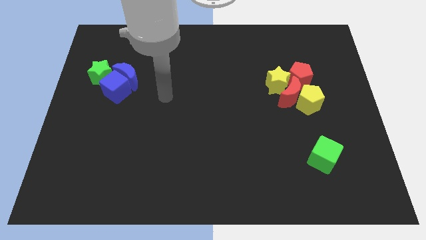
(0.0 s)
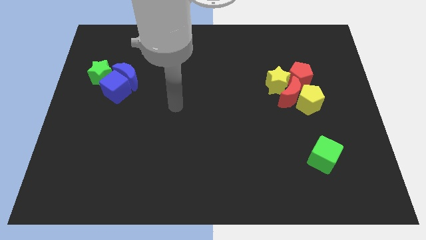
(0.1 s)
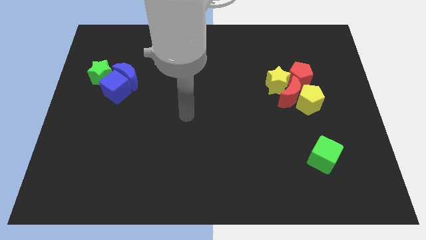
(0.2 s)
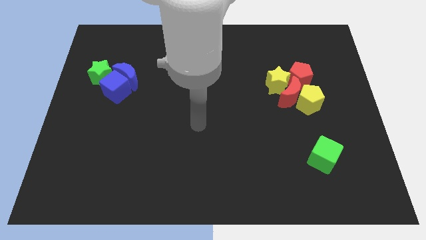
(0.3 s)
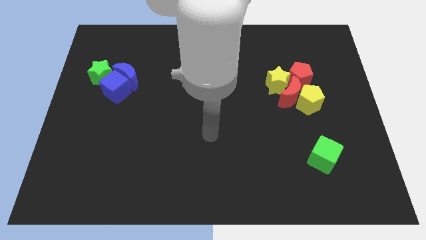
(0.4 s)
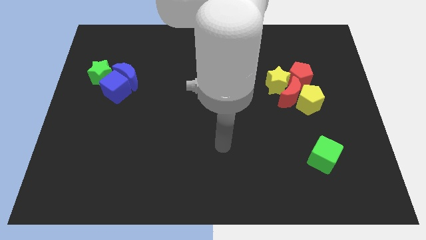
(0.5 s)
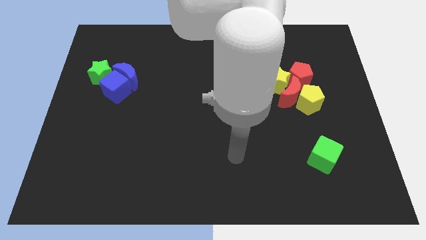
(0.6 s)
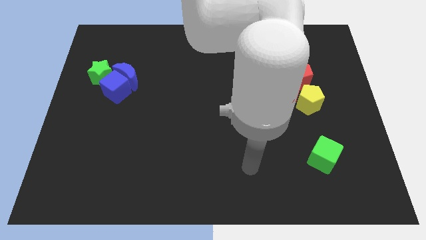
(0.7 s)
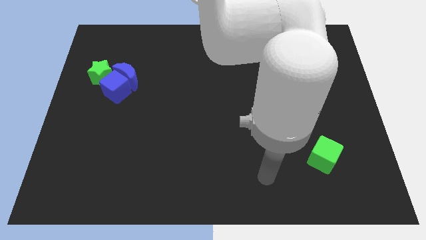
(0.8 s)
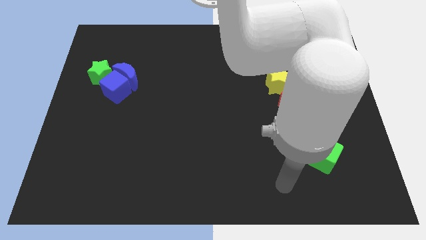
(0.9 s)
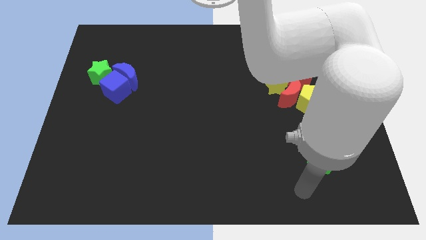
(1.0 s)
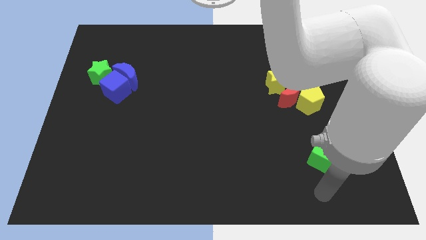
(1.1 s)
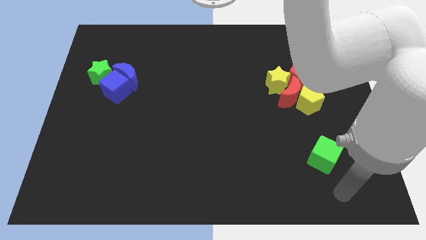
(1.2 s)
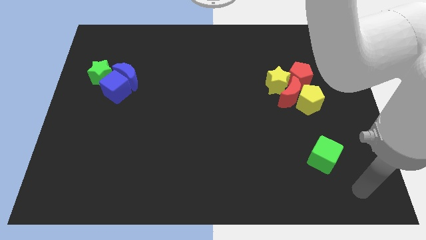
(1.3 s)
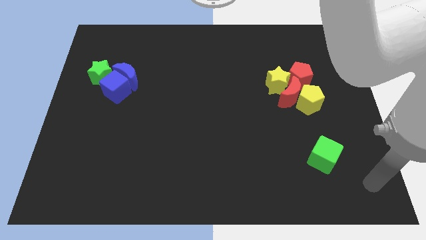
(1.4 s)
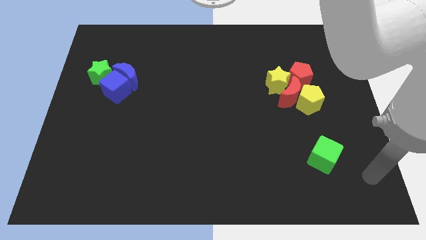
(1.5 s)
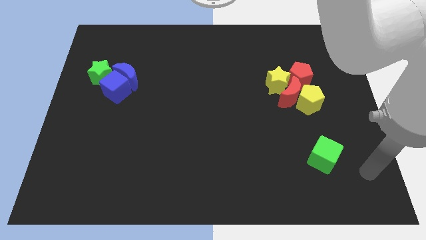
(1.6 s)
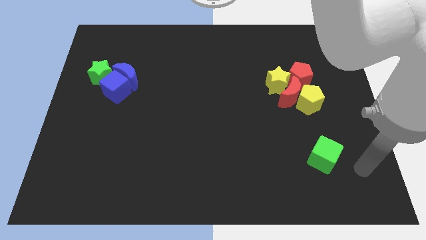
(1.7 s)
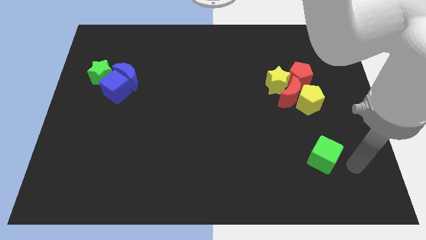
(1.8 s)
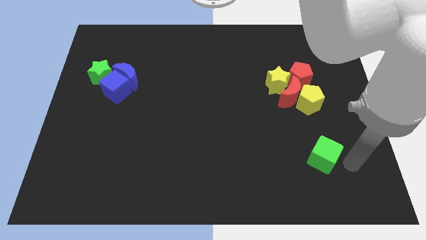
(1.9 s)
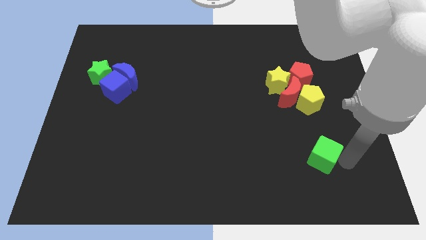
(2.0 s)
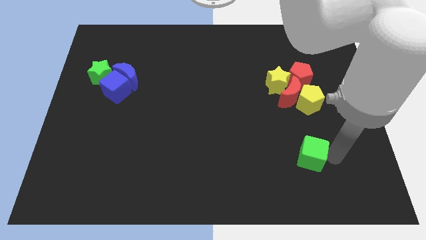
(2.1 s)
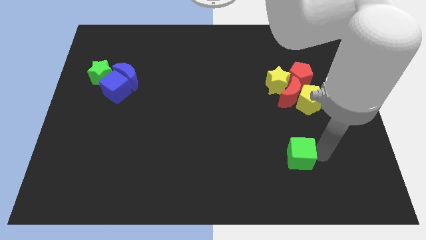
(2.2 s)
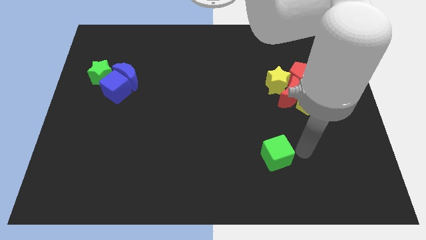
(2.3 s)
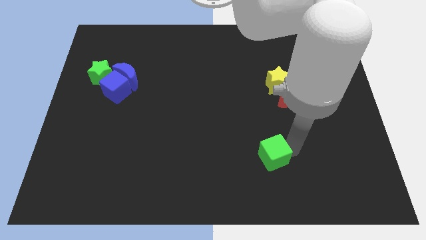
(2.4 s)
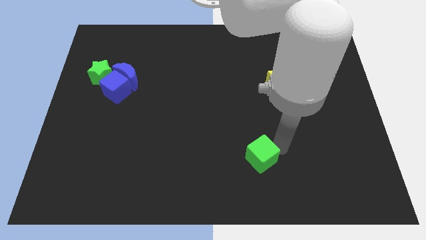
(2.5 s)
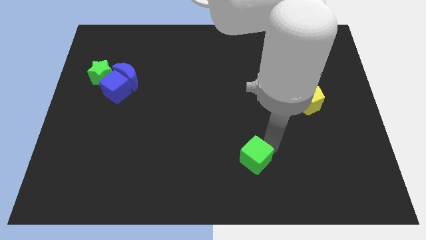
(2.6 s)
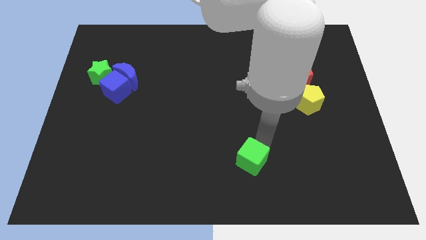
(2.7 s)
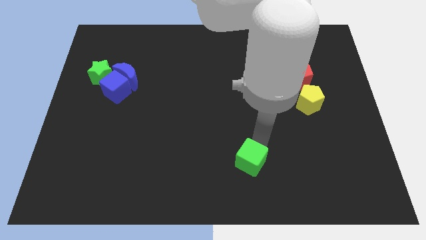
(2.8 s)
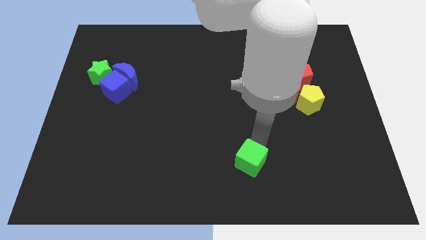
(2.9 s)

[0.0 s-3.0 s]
place the arm to the top of the green cube

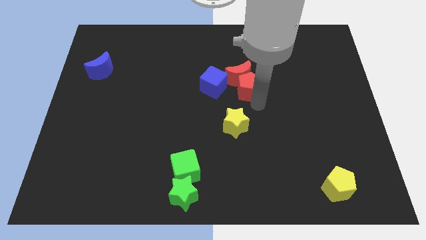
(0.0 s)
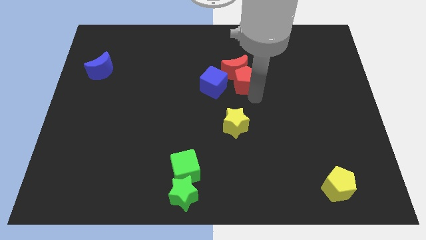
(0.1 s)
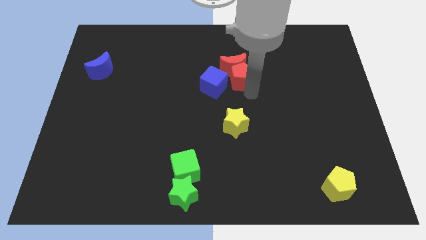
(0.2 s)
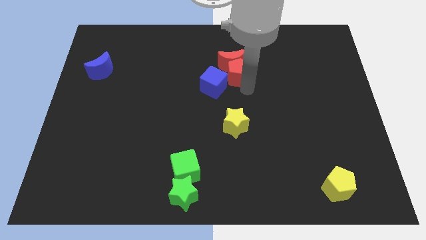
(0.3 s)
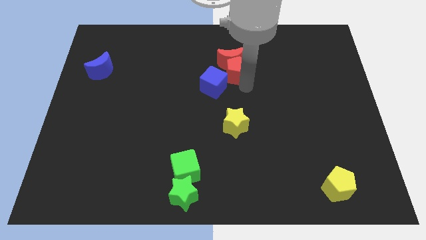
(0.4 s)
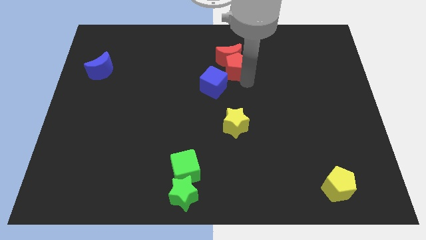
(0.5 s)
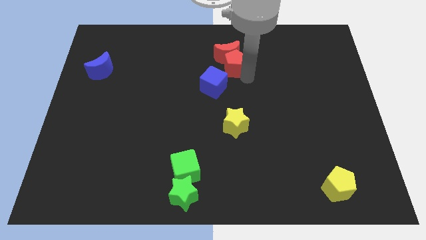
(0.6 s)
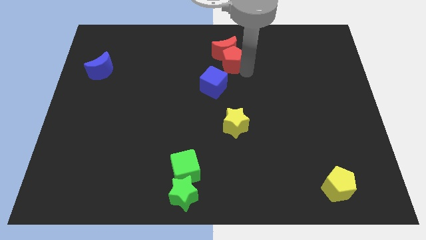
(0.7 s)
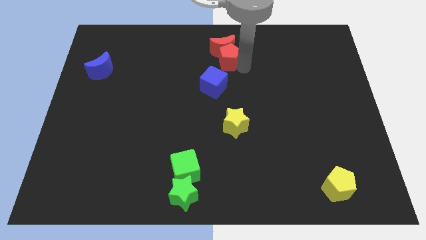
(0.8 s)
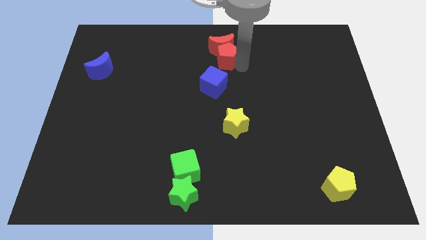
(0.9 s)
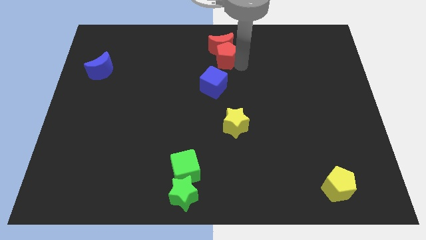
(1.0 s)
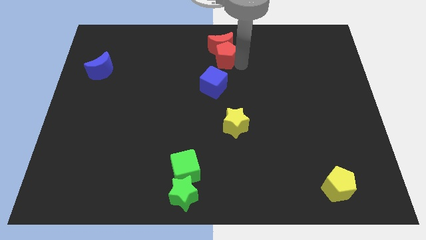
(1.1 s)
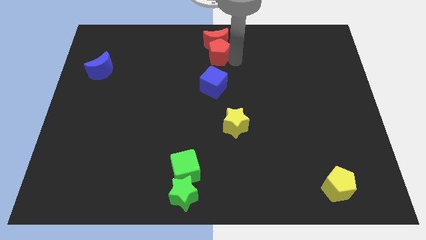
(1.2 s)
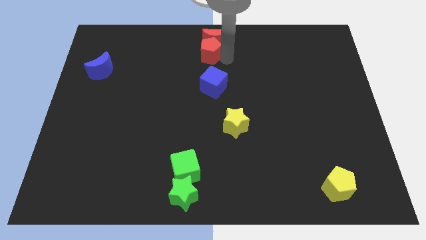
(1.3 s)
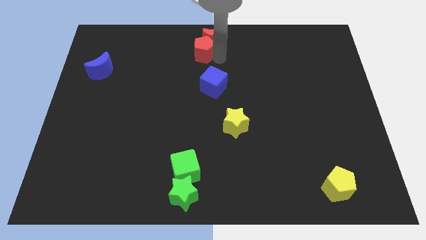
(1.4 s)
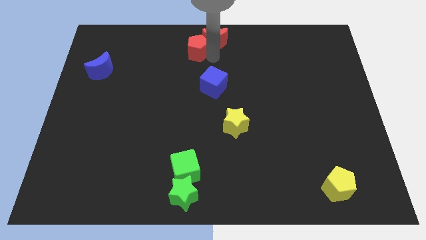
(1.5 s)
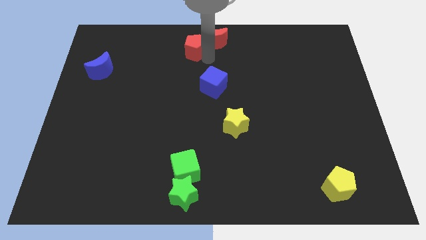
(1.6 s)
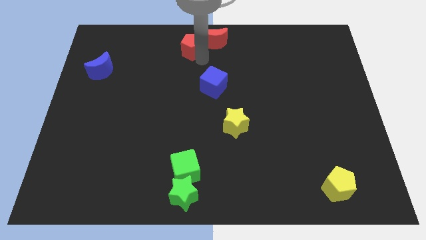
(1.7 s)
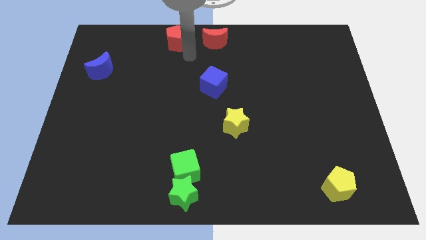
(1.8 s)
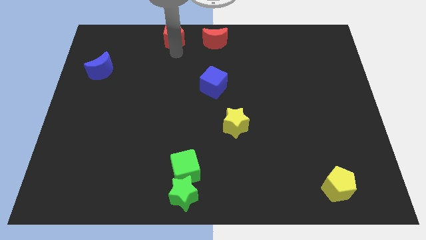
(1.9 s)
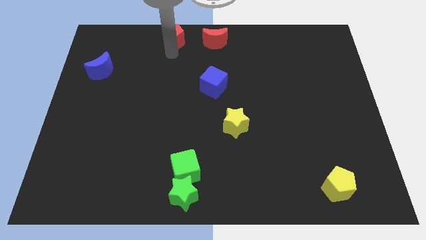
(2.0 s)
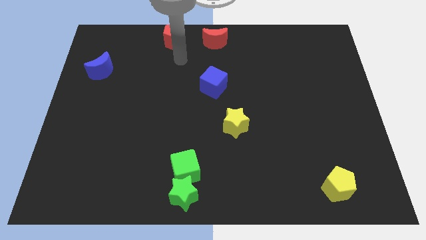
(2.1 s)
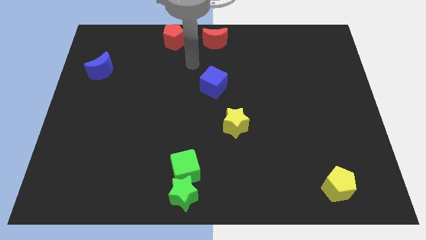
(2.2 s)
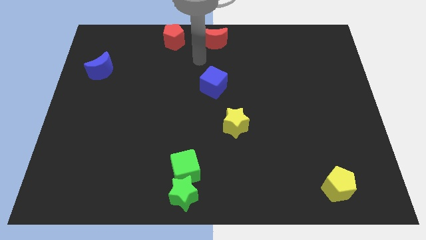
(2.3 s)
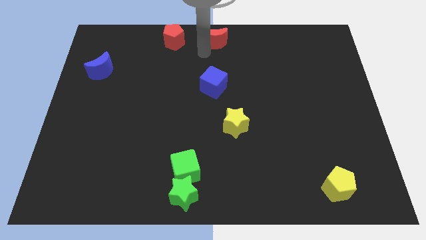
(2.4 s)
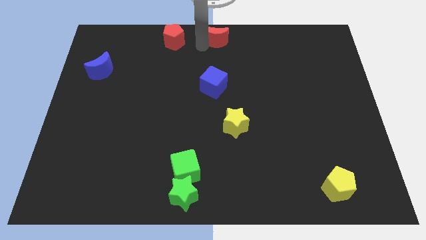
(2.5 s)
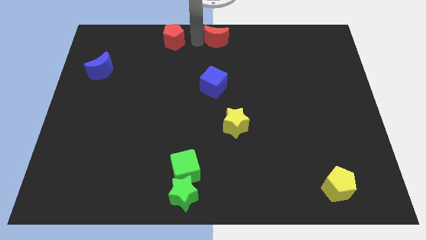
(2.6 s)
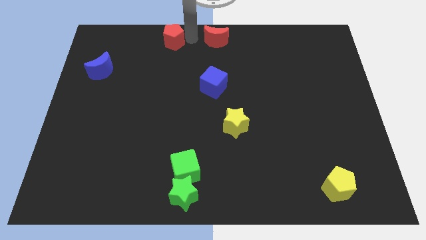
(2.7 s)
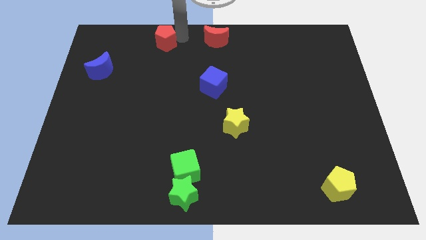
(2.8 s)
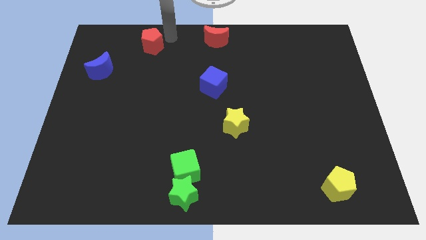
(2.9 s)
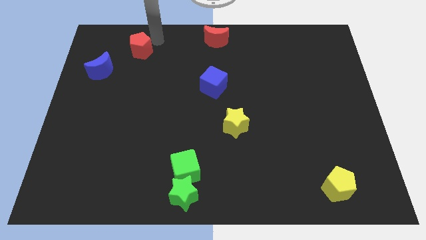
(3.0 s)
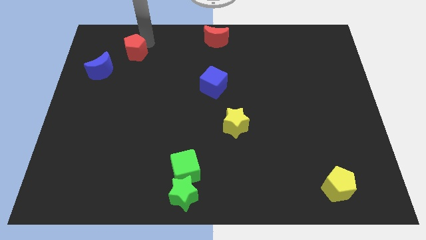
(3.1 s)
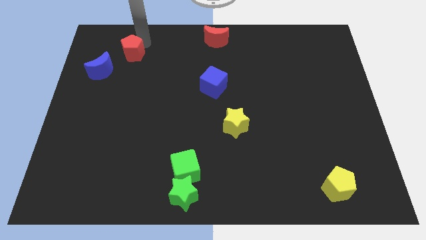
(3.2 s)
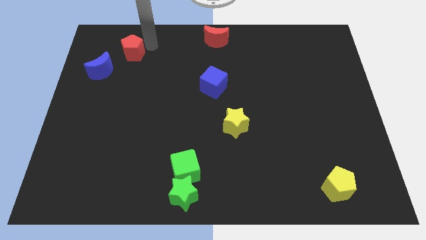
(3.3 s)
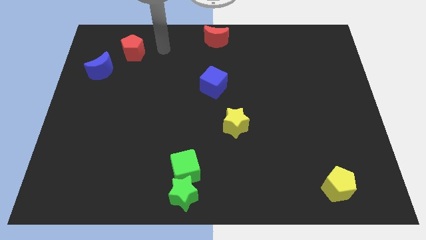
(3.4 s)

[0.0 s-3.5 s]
push the red blocks and separate the red pentagon diagonal above blue moon

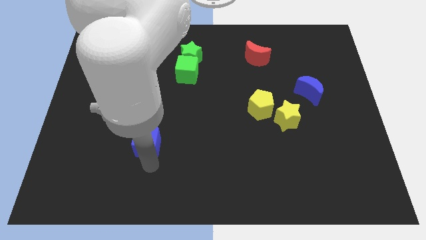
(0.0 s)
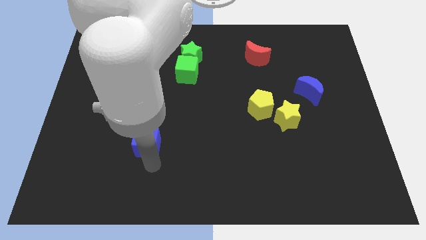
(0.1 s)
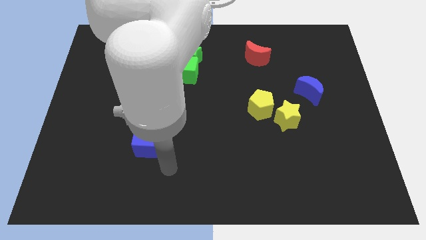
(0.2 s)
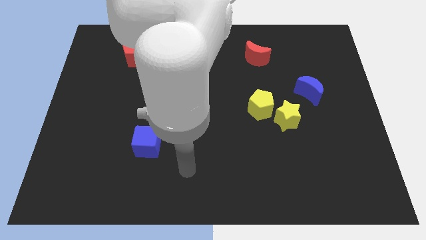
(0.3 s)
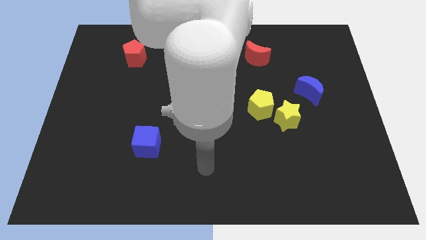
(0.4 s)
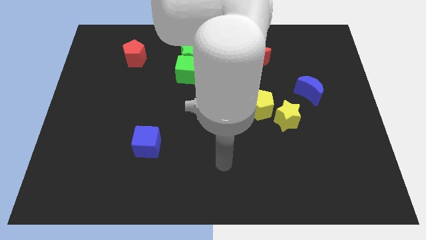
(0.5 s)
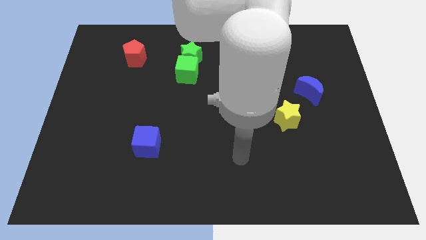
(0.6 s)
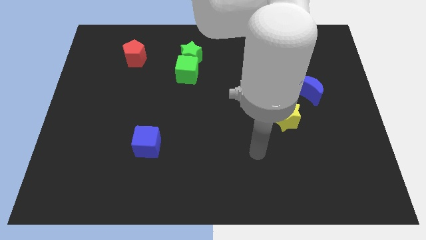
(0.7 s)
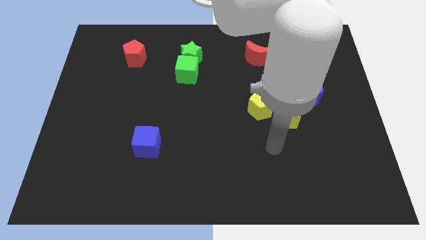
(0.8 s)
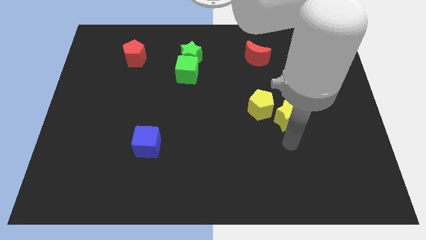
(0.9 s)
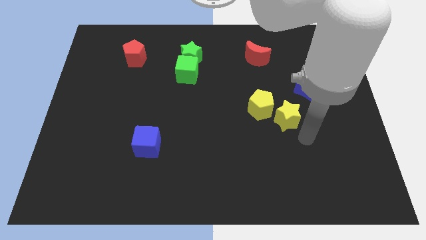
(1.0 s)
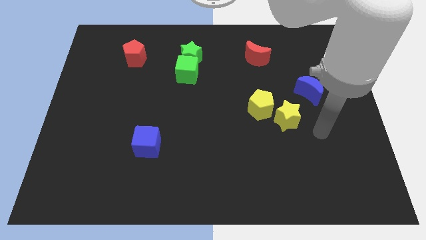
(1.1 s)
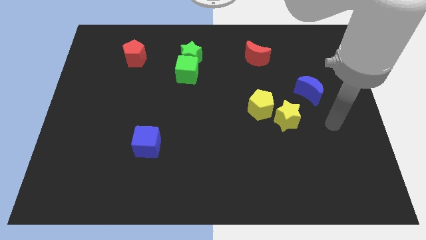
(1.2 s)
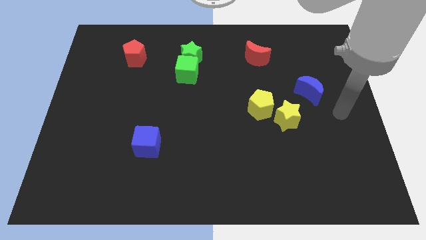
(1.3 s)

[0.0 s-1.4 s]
move arm away from blue cube

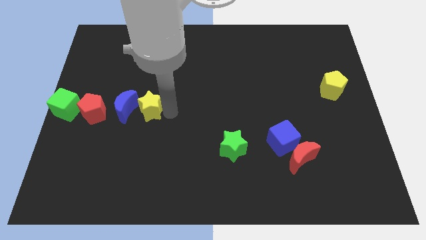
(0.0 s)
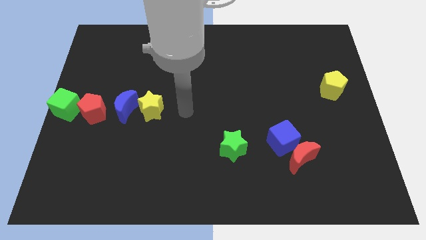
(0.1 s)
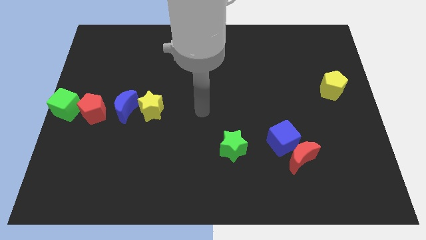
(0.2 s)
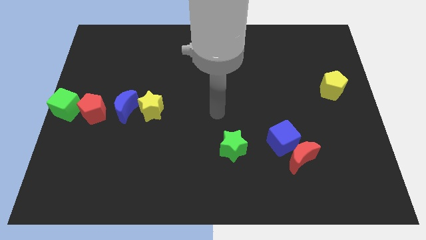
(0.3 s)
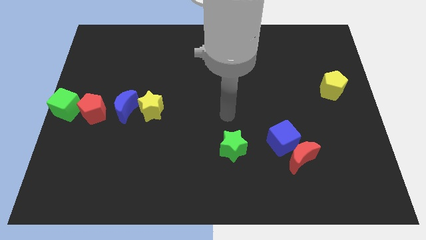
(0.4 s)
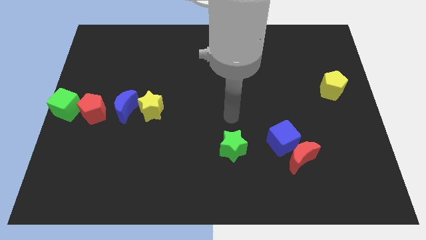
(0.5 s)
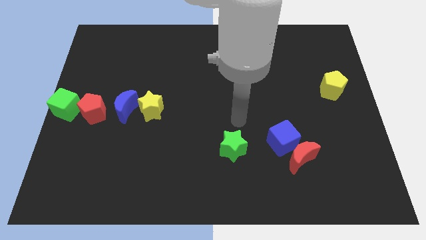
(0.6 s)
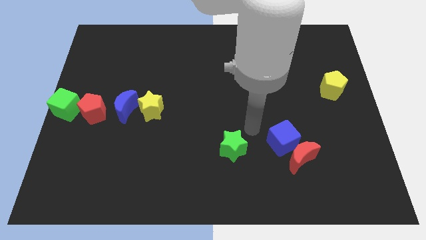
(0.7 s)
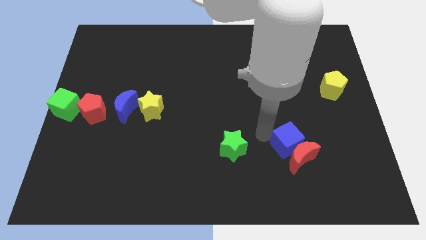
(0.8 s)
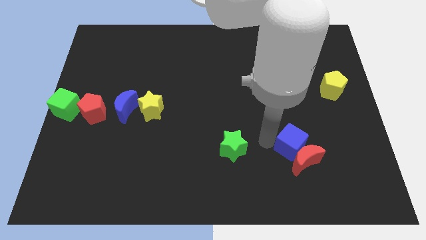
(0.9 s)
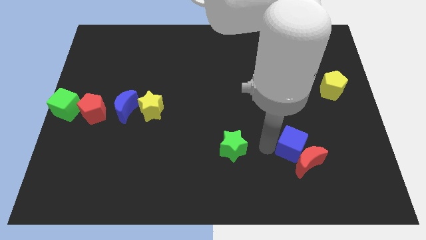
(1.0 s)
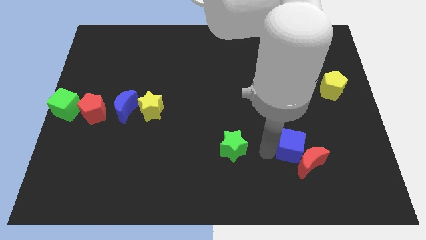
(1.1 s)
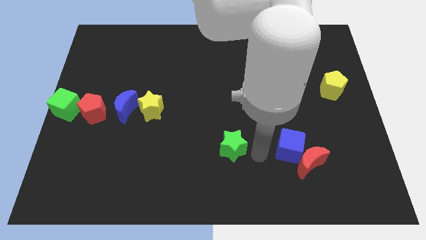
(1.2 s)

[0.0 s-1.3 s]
slightly touch left to the blue cube
